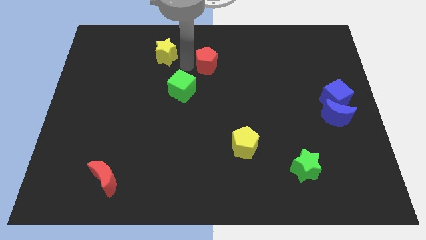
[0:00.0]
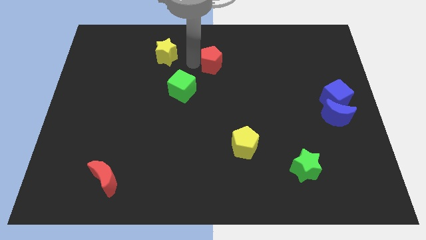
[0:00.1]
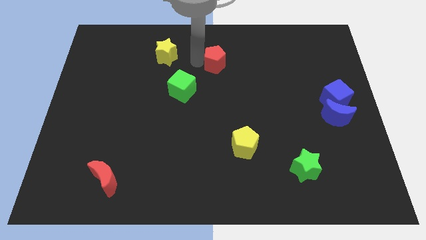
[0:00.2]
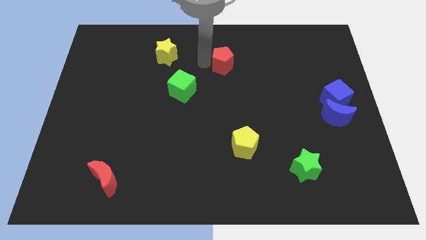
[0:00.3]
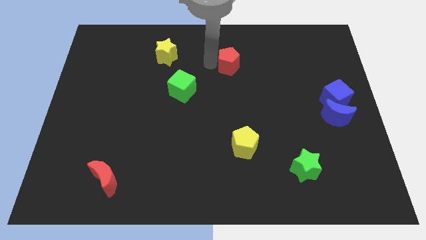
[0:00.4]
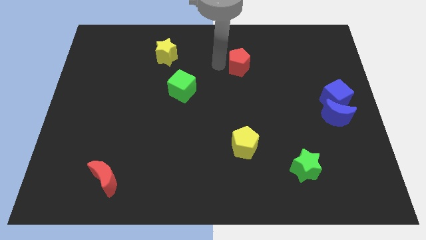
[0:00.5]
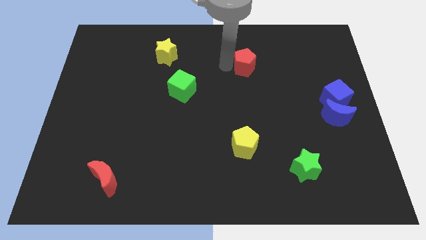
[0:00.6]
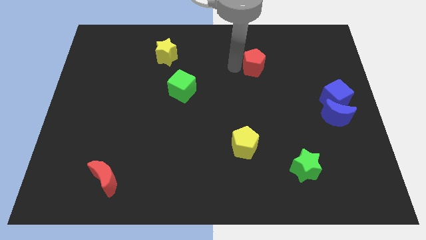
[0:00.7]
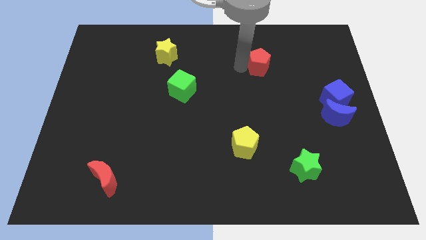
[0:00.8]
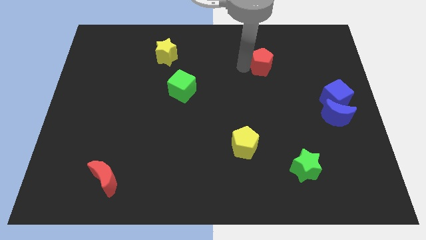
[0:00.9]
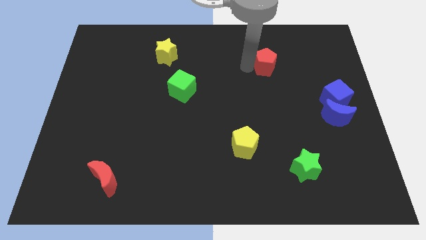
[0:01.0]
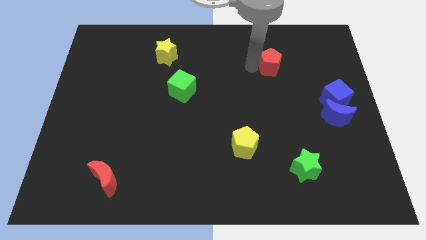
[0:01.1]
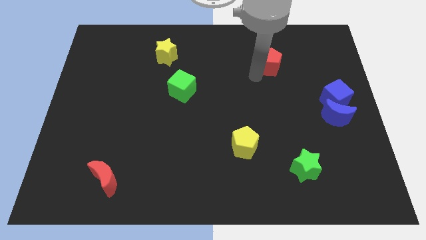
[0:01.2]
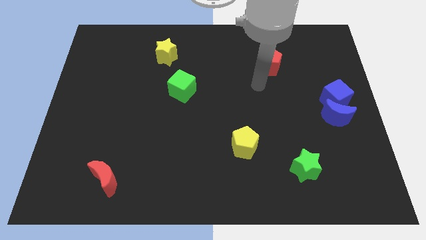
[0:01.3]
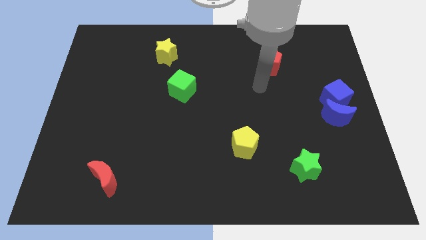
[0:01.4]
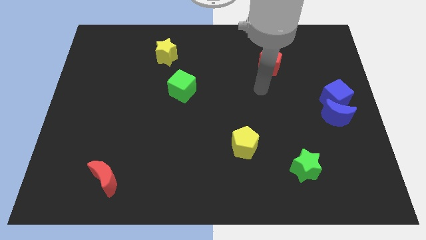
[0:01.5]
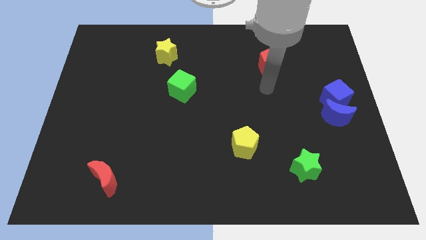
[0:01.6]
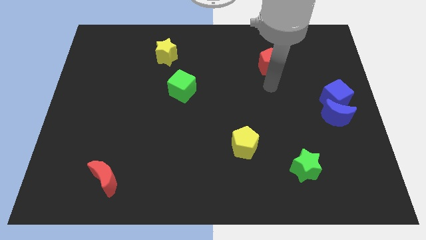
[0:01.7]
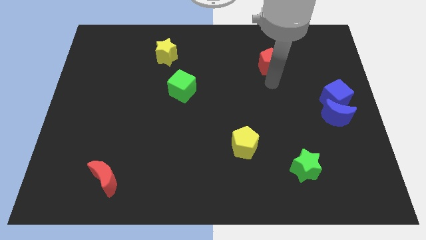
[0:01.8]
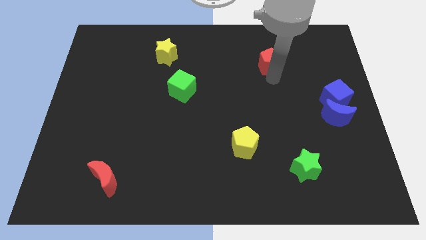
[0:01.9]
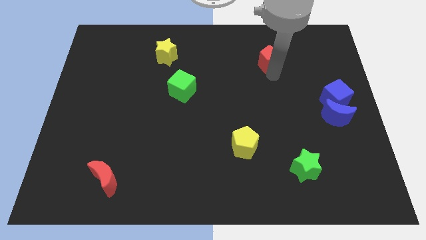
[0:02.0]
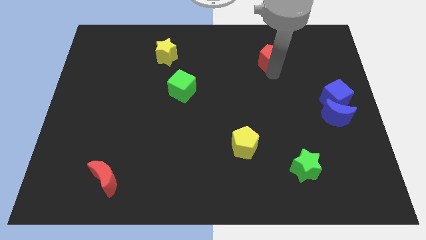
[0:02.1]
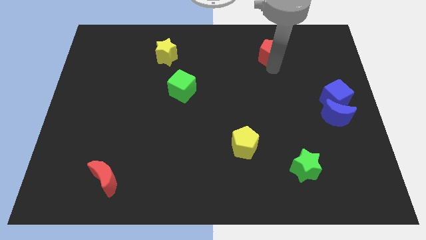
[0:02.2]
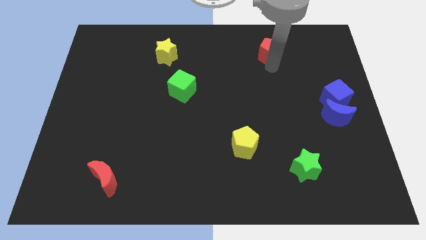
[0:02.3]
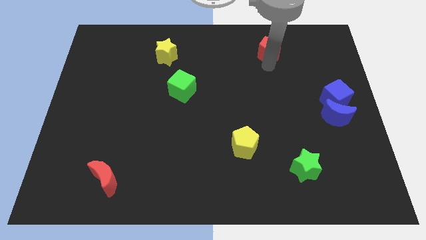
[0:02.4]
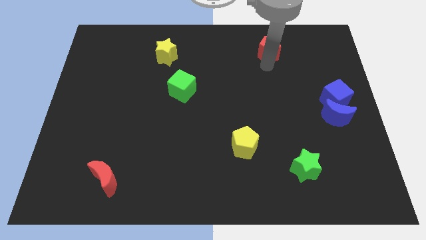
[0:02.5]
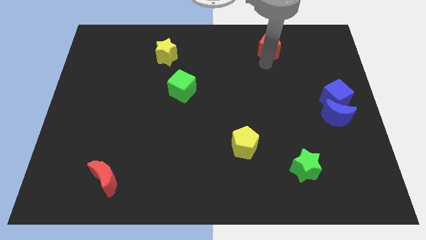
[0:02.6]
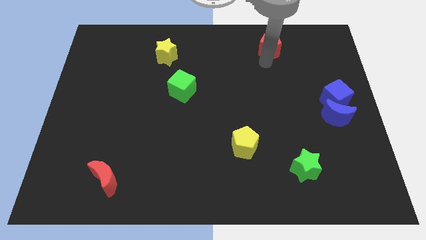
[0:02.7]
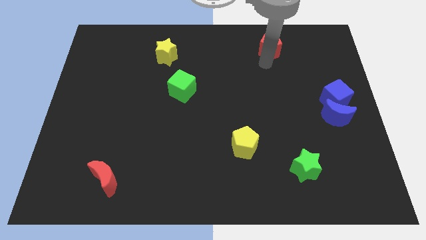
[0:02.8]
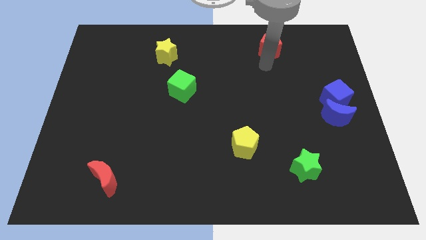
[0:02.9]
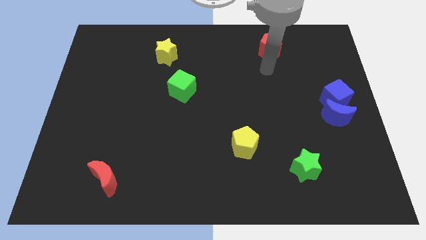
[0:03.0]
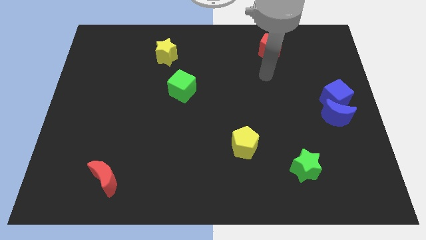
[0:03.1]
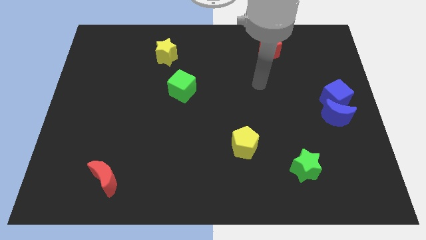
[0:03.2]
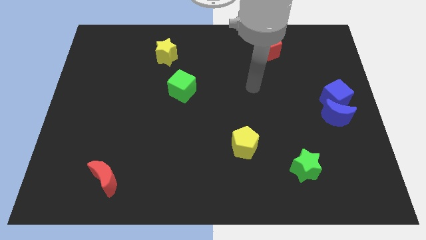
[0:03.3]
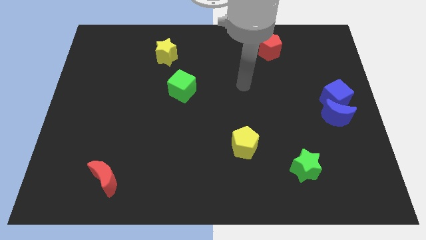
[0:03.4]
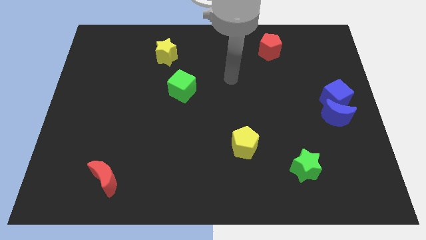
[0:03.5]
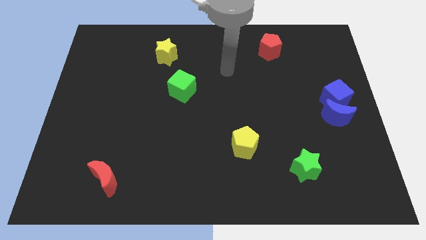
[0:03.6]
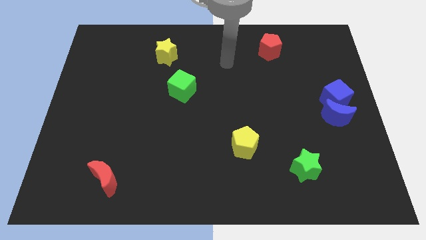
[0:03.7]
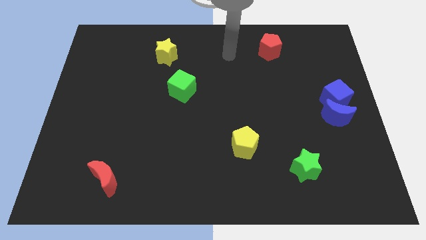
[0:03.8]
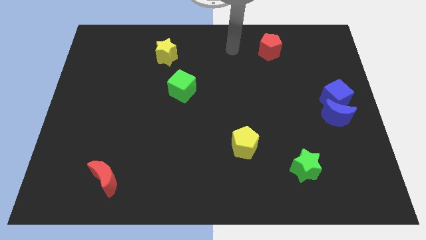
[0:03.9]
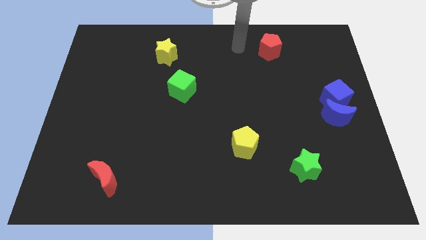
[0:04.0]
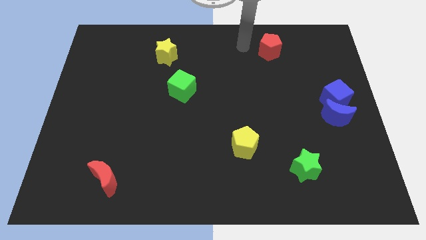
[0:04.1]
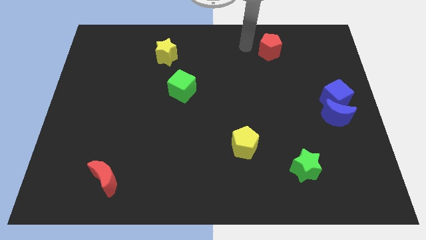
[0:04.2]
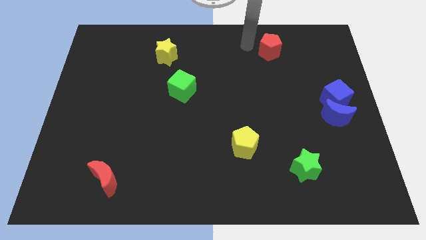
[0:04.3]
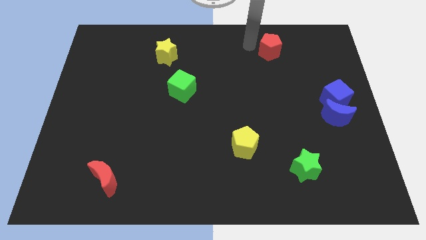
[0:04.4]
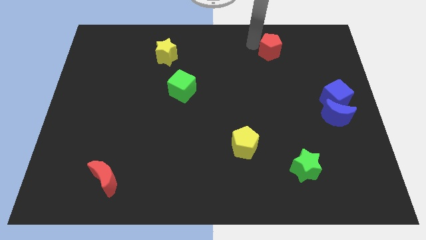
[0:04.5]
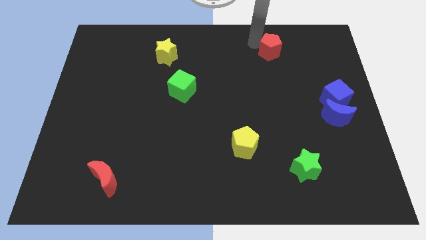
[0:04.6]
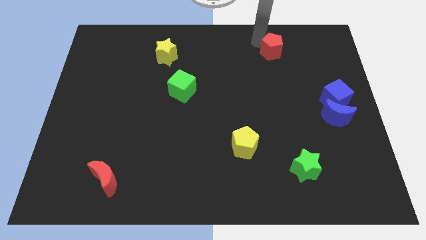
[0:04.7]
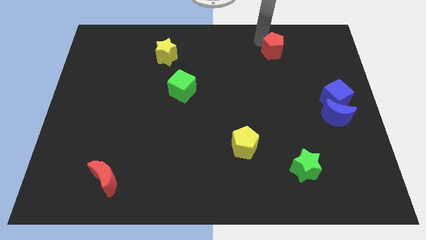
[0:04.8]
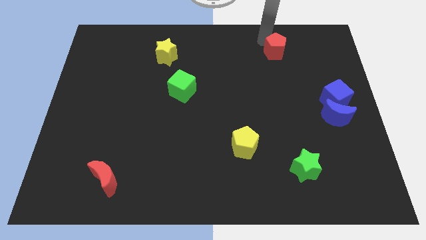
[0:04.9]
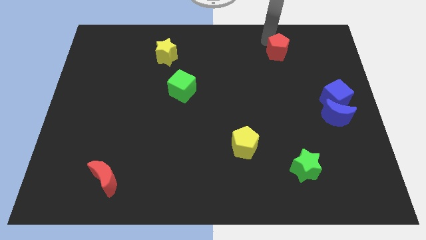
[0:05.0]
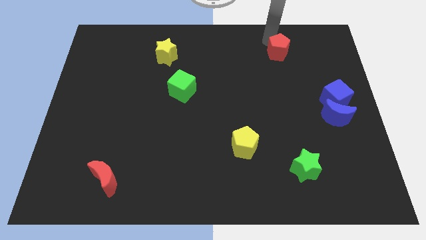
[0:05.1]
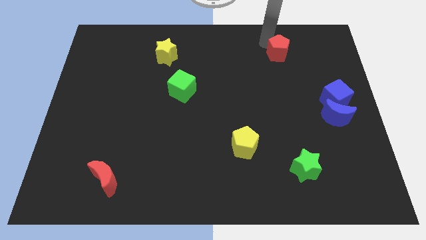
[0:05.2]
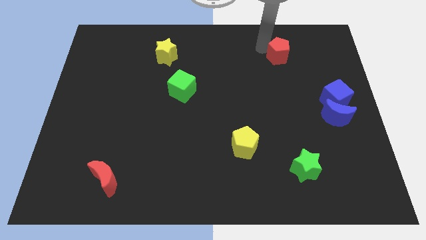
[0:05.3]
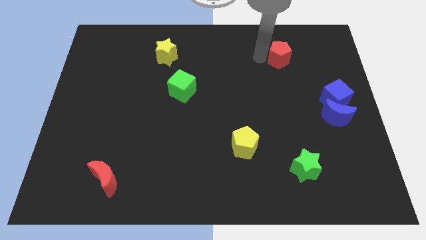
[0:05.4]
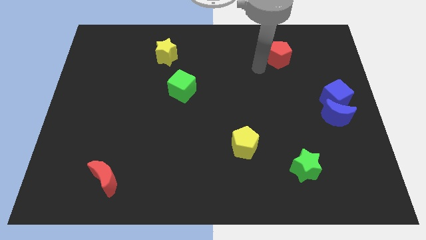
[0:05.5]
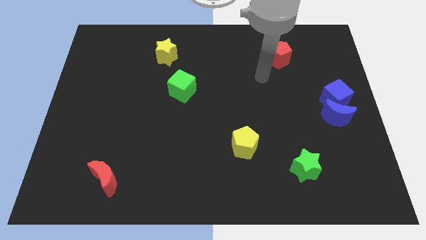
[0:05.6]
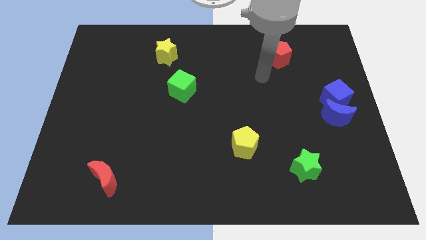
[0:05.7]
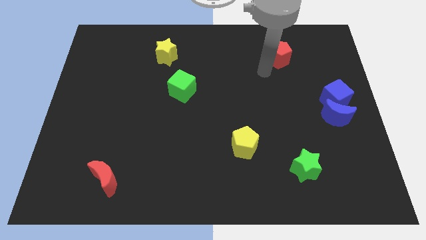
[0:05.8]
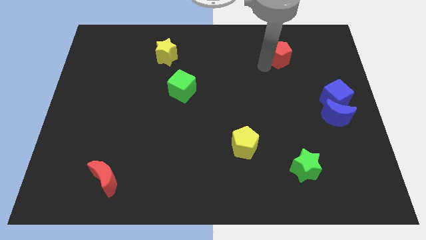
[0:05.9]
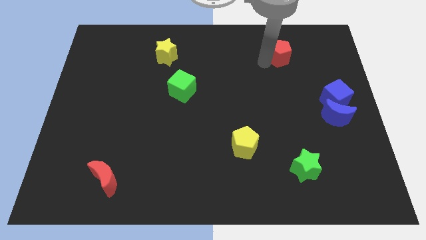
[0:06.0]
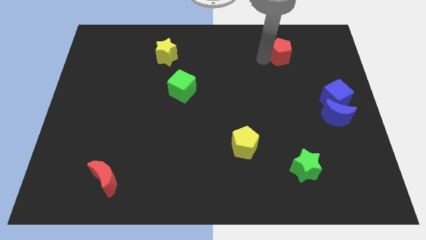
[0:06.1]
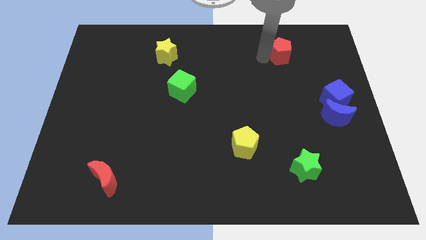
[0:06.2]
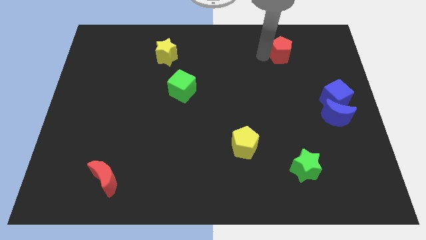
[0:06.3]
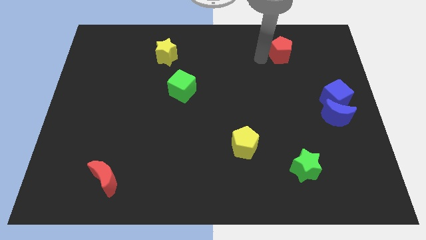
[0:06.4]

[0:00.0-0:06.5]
slide the red pentagon towards the top right

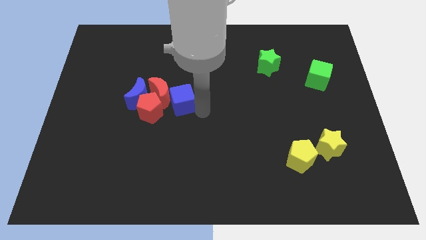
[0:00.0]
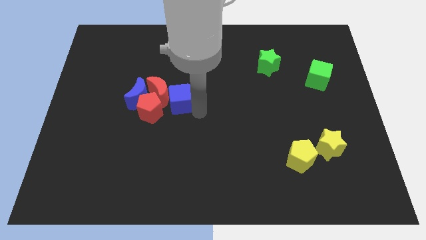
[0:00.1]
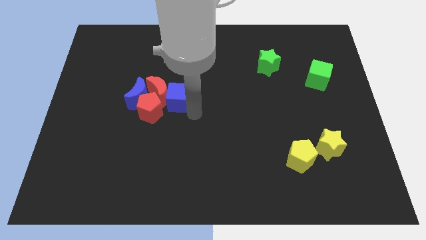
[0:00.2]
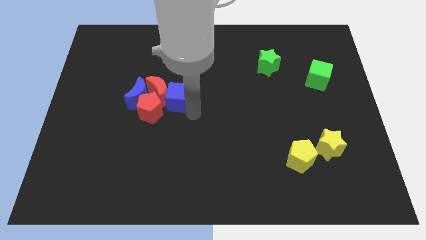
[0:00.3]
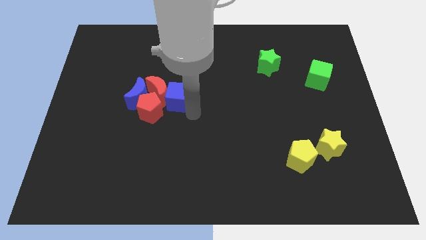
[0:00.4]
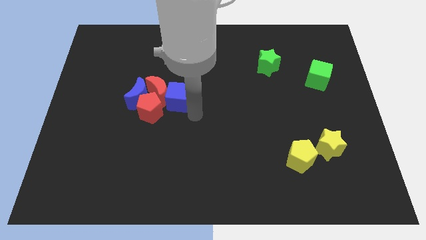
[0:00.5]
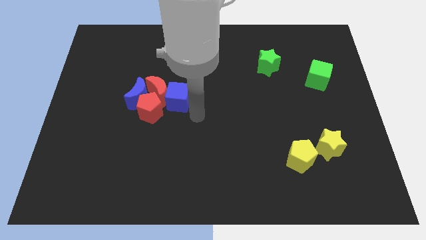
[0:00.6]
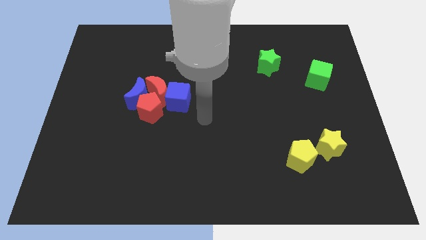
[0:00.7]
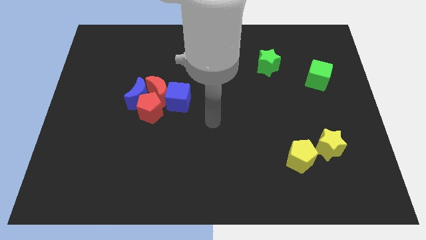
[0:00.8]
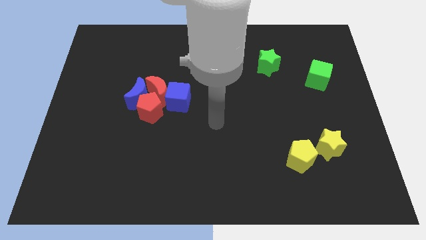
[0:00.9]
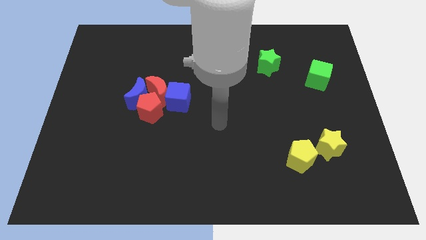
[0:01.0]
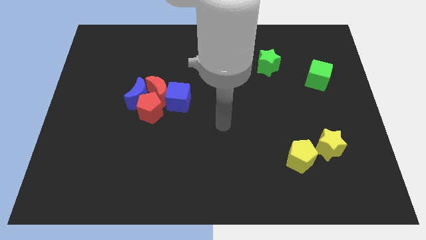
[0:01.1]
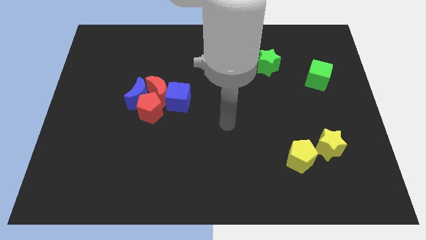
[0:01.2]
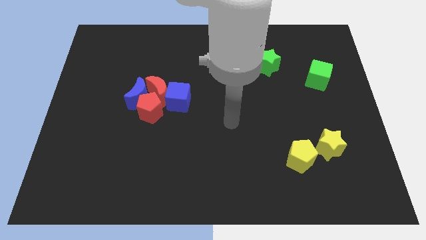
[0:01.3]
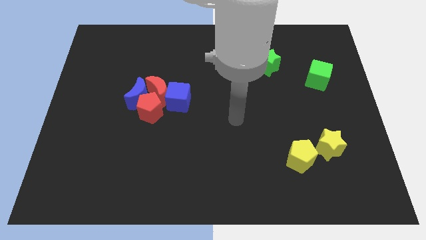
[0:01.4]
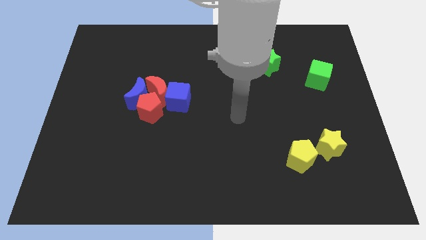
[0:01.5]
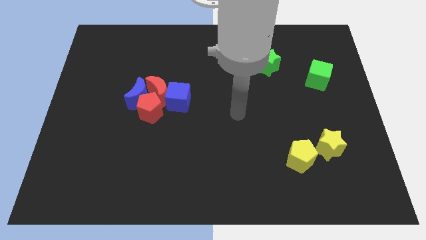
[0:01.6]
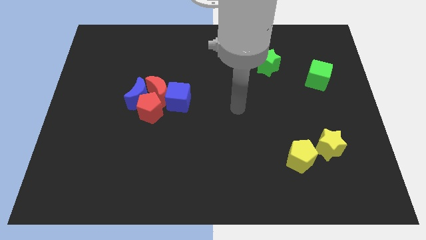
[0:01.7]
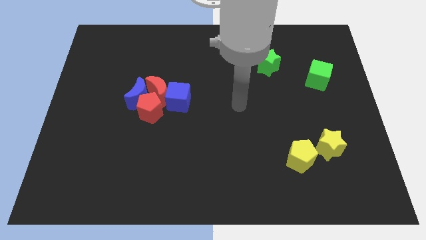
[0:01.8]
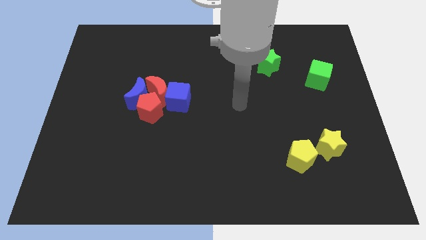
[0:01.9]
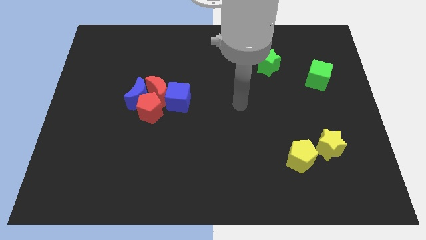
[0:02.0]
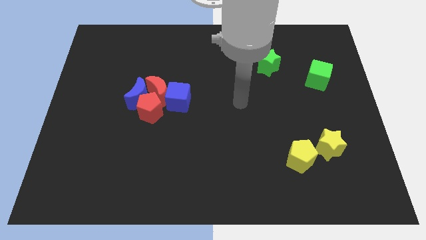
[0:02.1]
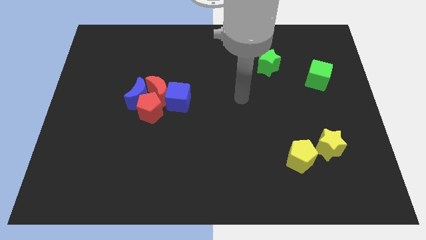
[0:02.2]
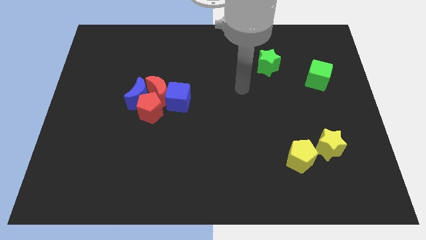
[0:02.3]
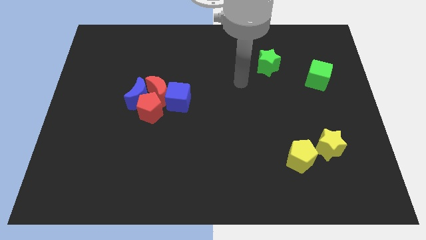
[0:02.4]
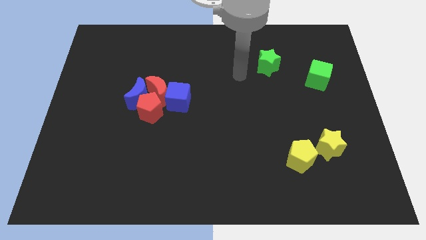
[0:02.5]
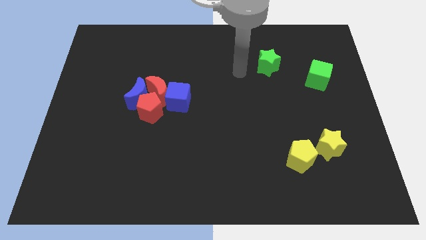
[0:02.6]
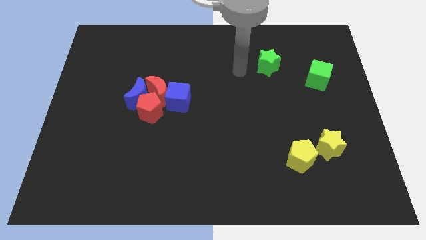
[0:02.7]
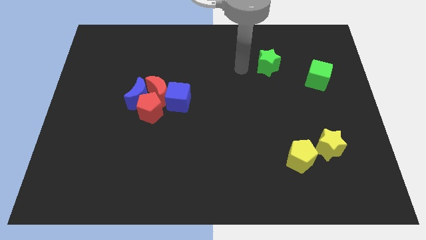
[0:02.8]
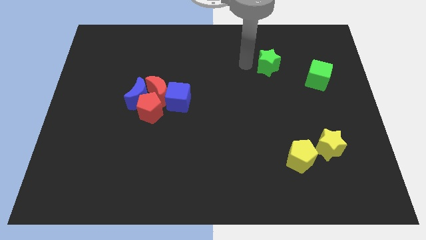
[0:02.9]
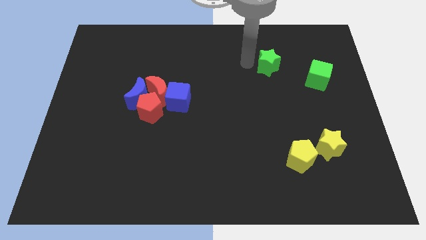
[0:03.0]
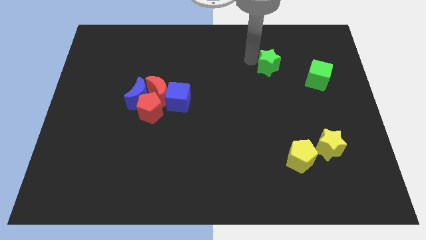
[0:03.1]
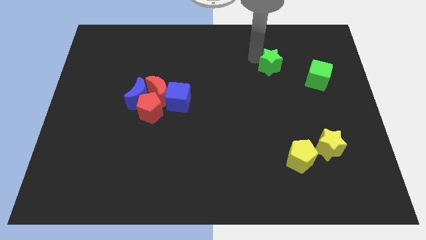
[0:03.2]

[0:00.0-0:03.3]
move the arm to the green star
